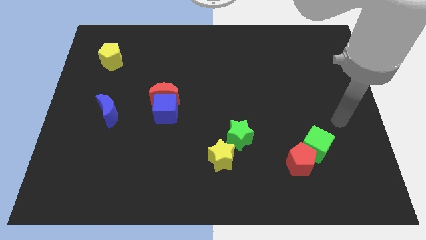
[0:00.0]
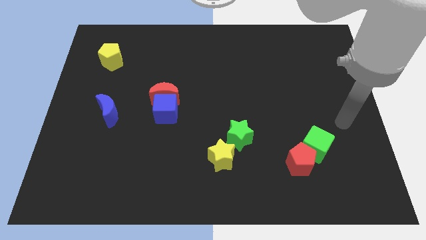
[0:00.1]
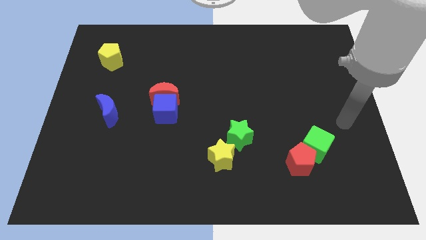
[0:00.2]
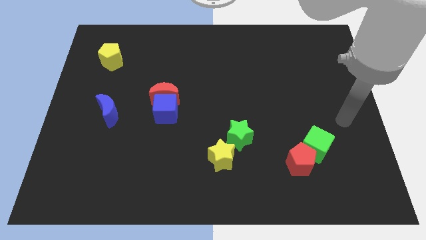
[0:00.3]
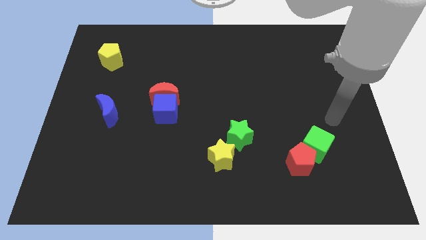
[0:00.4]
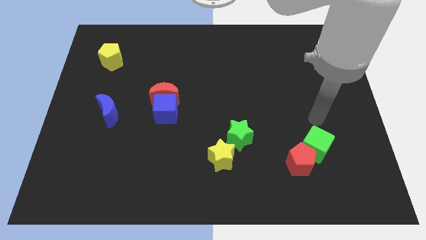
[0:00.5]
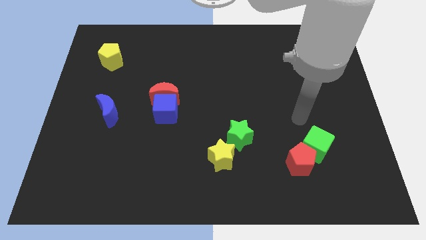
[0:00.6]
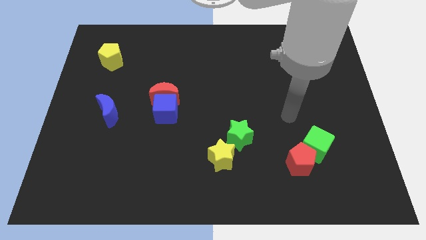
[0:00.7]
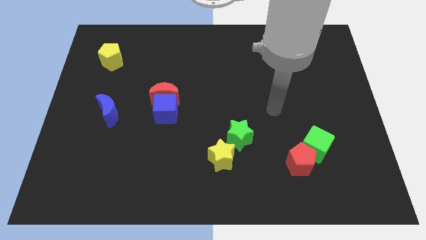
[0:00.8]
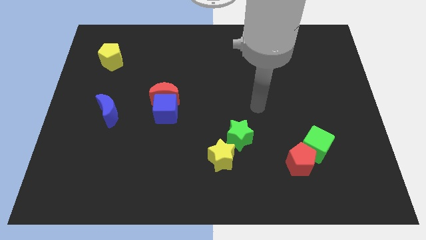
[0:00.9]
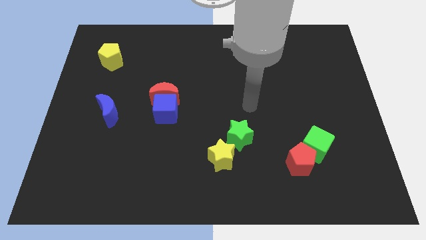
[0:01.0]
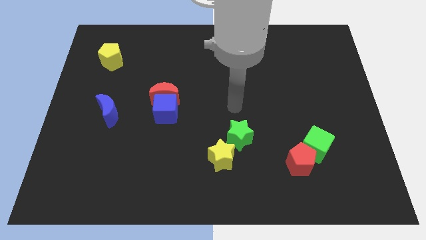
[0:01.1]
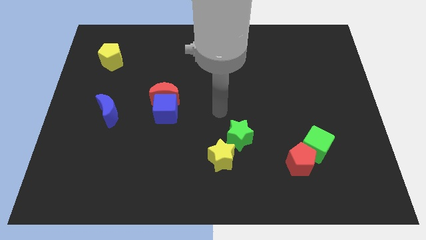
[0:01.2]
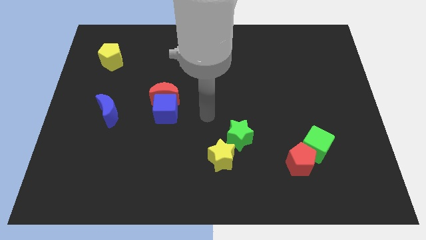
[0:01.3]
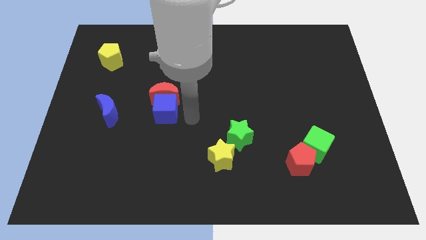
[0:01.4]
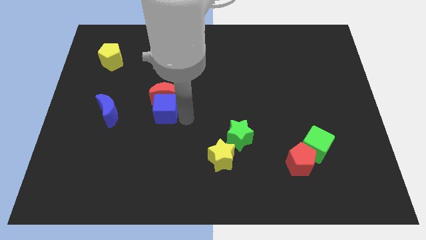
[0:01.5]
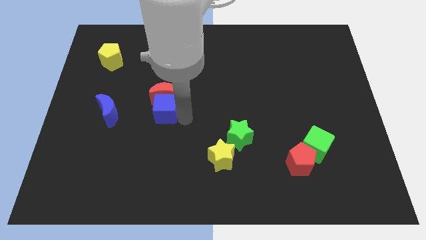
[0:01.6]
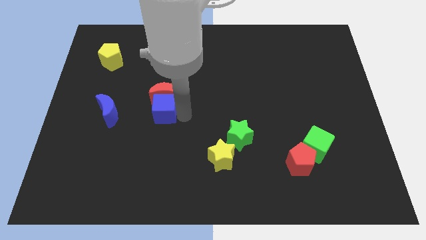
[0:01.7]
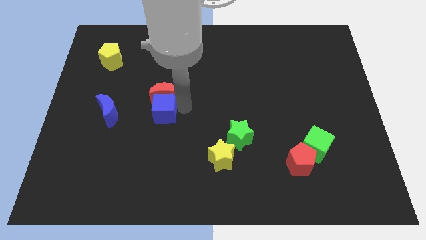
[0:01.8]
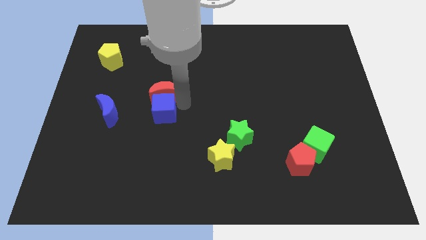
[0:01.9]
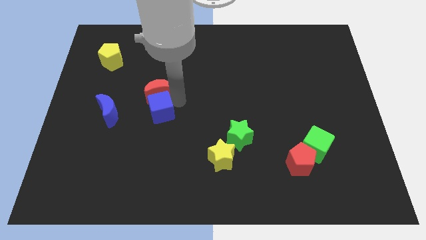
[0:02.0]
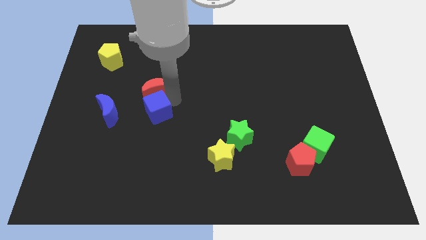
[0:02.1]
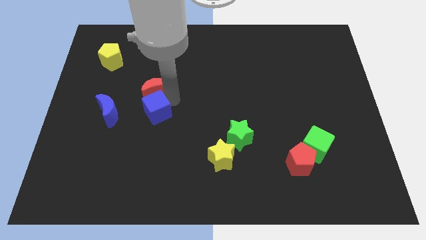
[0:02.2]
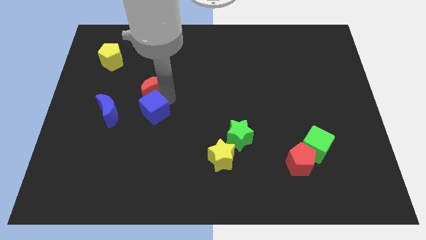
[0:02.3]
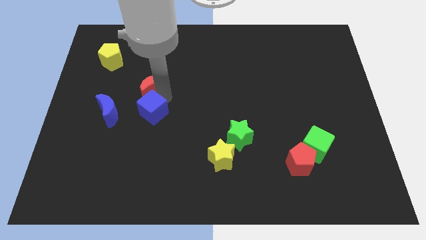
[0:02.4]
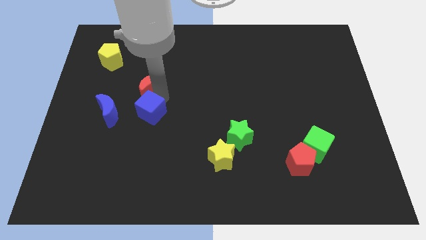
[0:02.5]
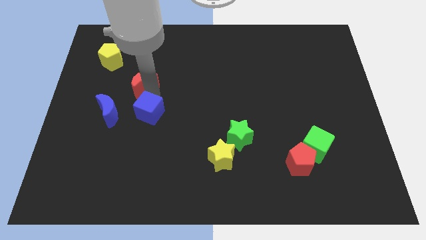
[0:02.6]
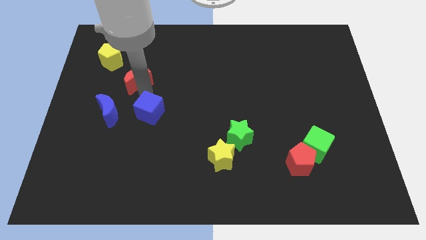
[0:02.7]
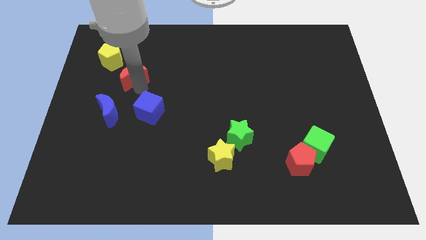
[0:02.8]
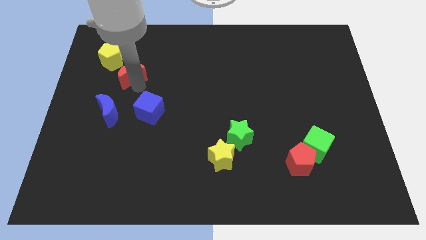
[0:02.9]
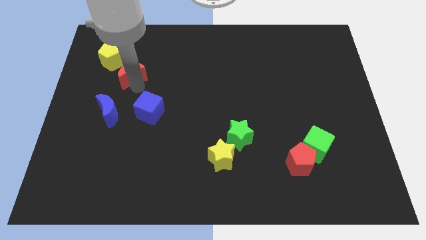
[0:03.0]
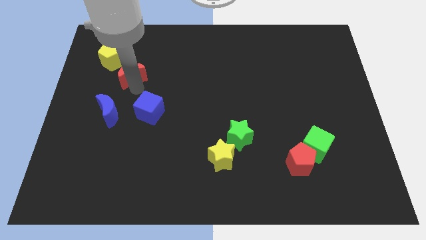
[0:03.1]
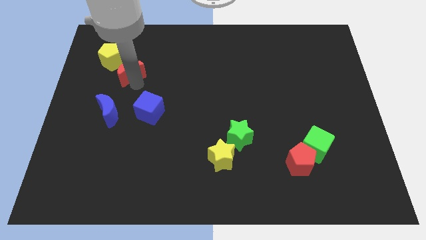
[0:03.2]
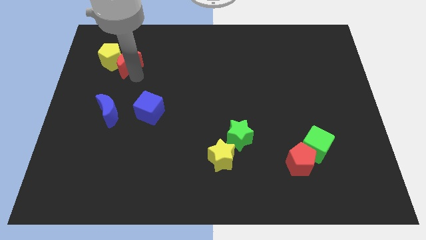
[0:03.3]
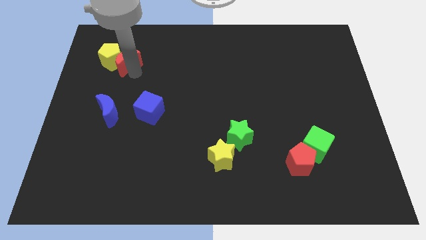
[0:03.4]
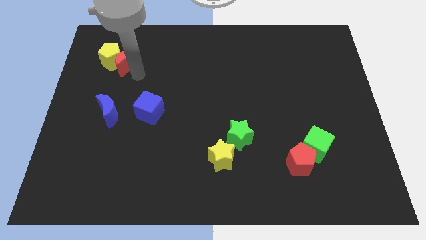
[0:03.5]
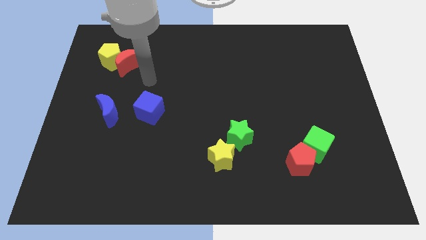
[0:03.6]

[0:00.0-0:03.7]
push blue moon towards left side of the board

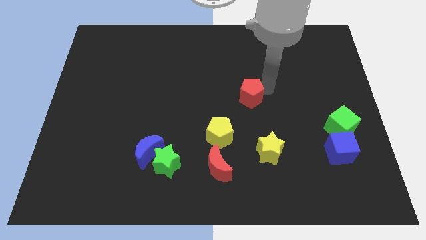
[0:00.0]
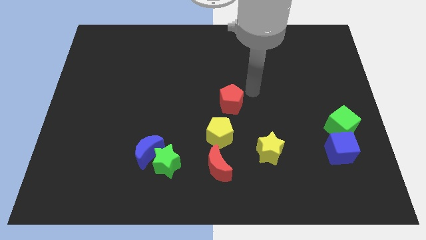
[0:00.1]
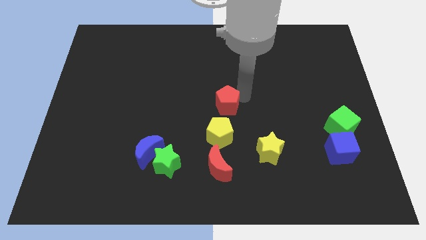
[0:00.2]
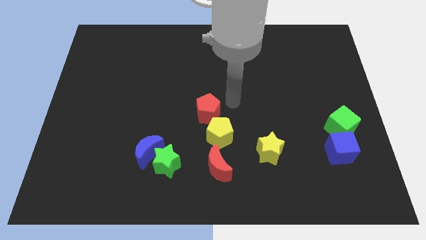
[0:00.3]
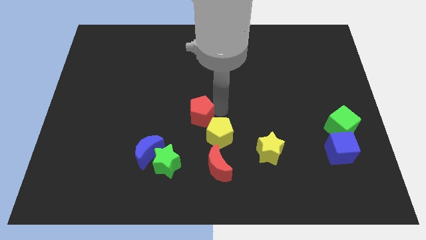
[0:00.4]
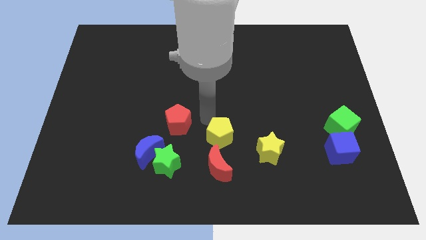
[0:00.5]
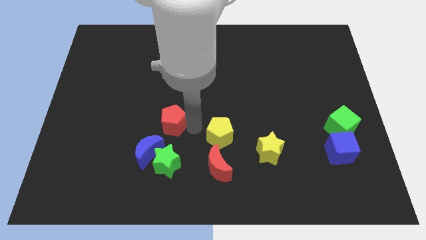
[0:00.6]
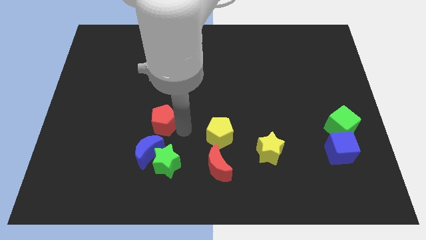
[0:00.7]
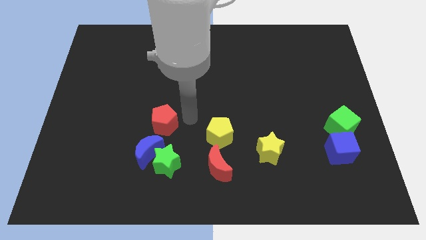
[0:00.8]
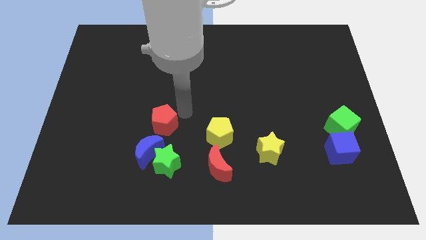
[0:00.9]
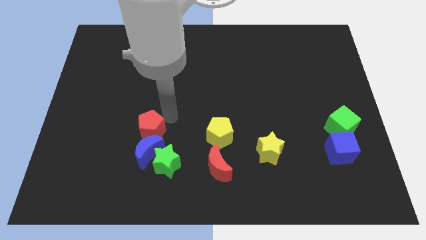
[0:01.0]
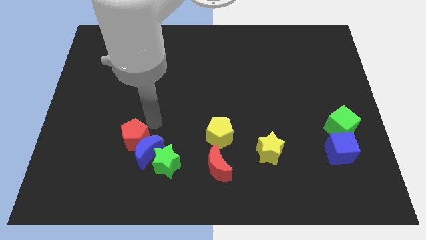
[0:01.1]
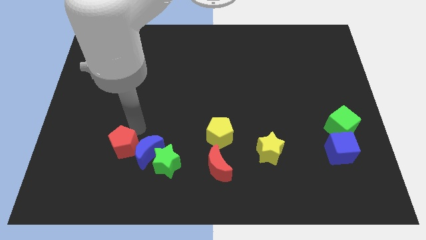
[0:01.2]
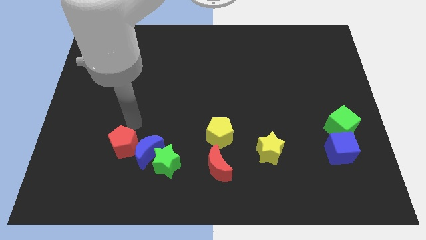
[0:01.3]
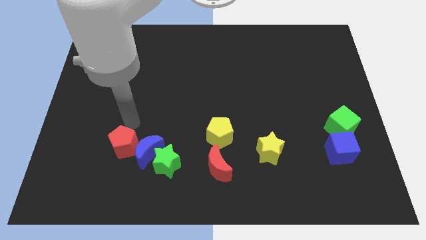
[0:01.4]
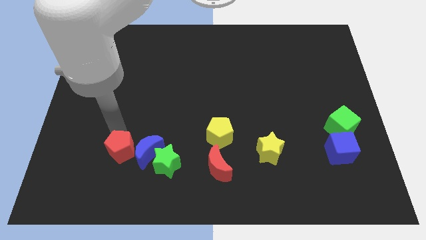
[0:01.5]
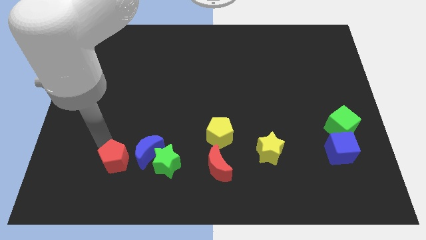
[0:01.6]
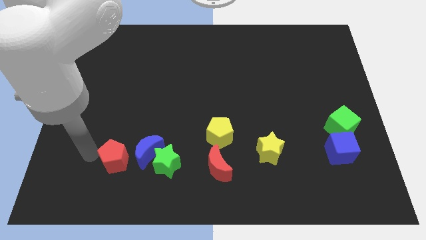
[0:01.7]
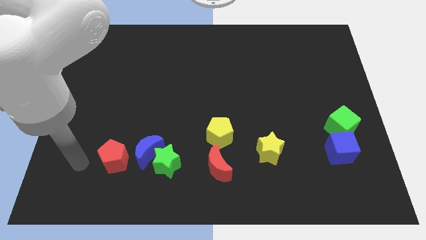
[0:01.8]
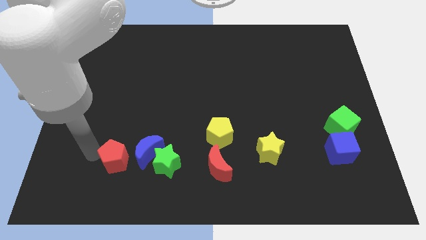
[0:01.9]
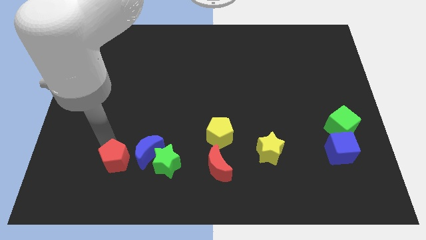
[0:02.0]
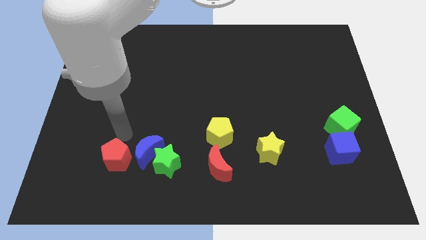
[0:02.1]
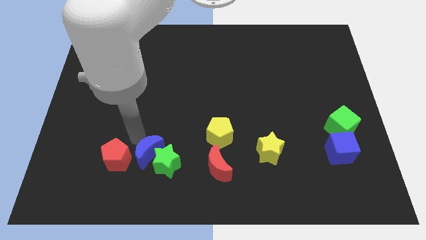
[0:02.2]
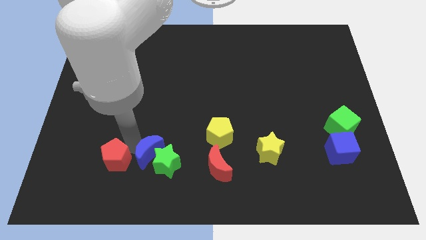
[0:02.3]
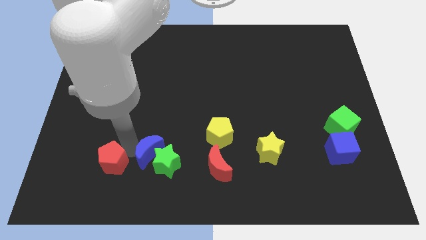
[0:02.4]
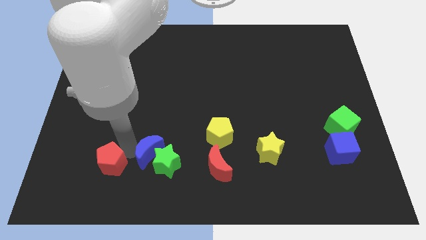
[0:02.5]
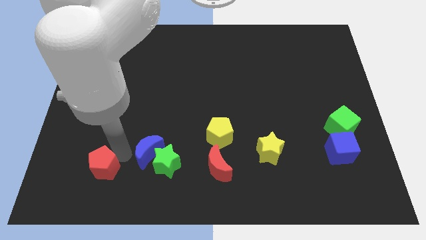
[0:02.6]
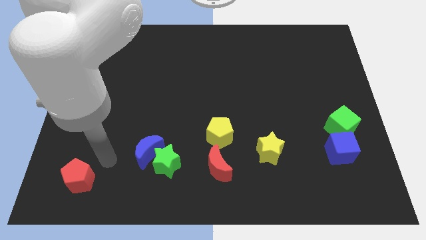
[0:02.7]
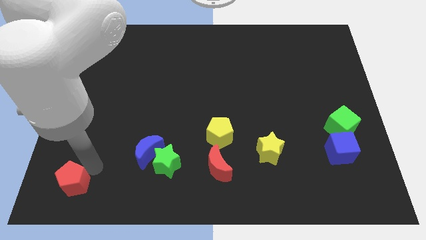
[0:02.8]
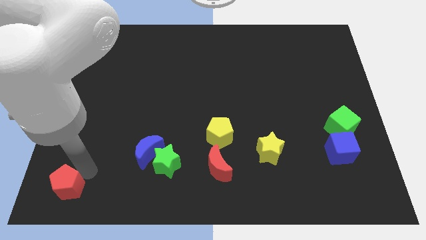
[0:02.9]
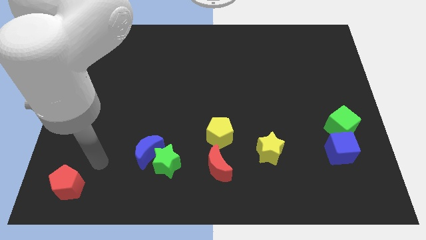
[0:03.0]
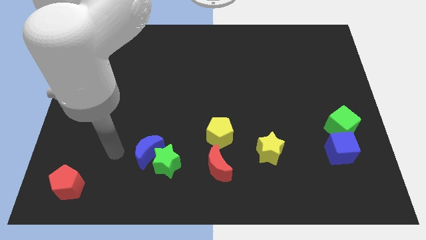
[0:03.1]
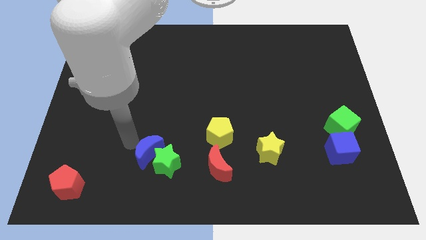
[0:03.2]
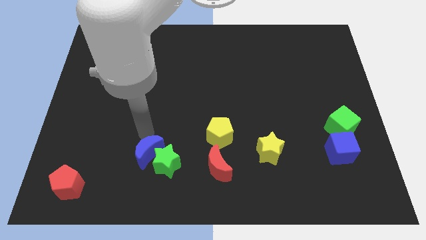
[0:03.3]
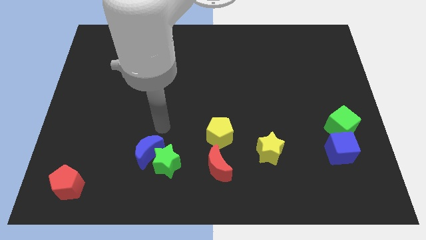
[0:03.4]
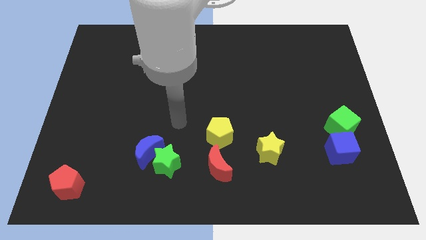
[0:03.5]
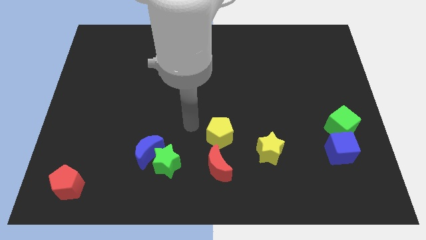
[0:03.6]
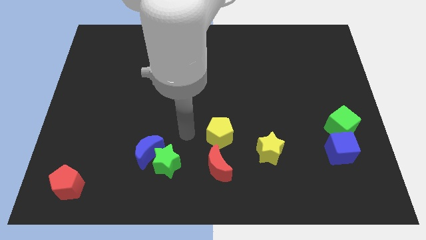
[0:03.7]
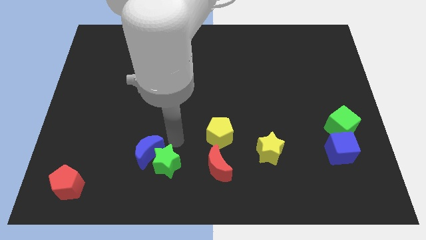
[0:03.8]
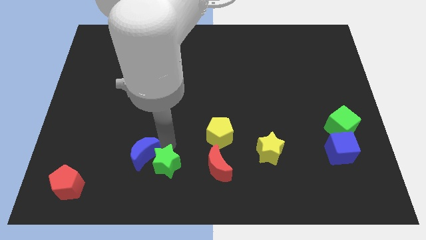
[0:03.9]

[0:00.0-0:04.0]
push the red pentagon to the bottom left of the board

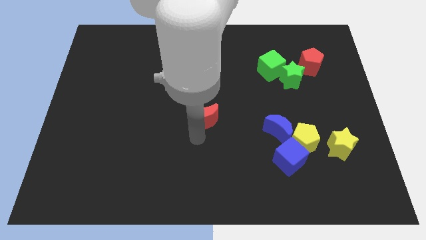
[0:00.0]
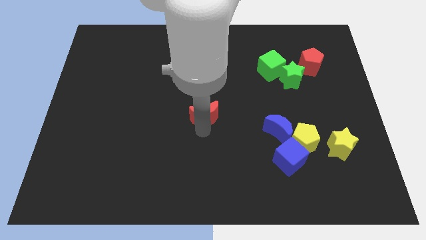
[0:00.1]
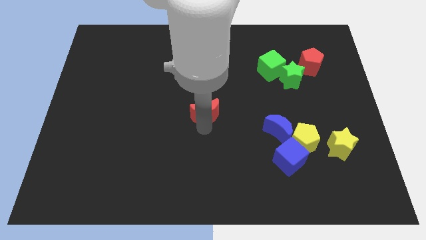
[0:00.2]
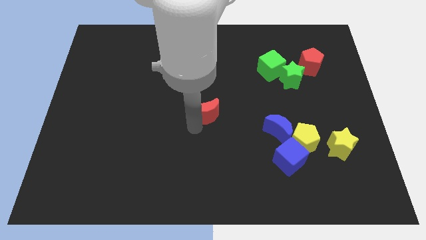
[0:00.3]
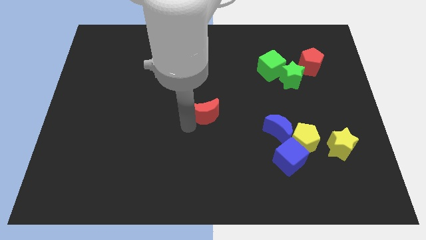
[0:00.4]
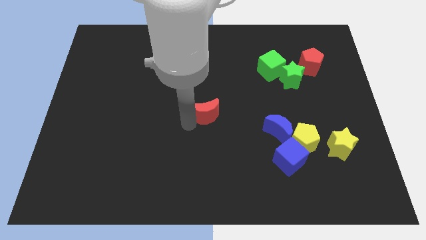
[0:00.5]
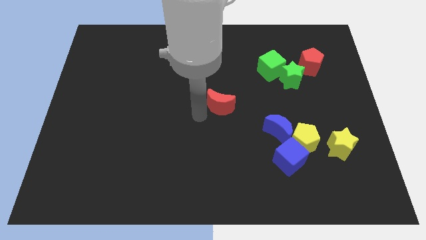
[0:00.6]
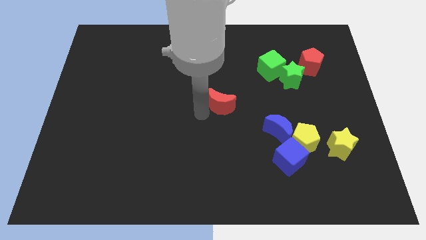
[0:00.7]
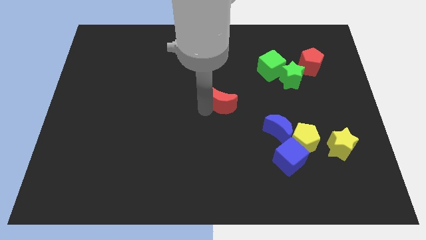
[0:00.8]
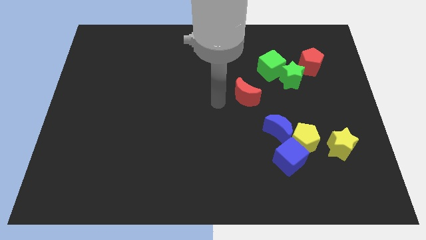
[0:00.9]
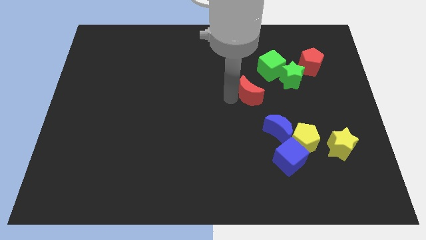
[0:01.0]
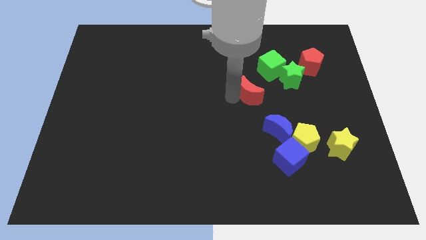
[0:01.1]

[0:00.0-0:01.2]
move the red crescent close towards the green star

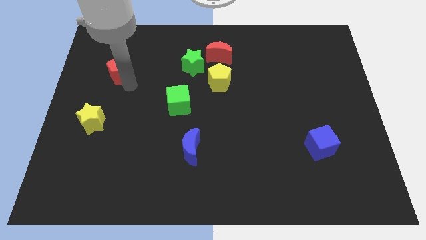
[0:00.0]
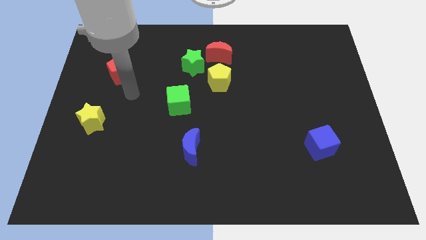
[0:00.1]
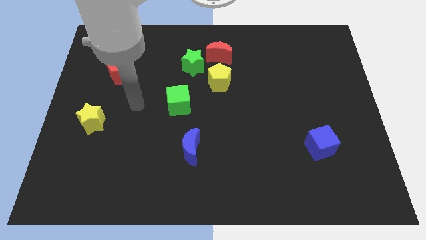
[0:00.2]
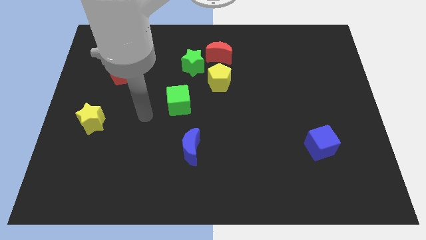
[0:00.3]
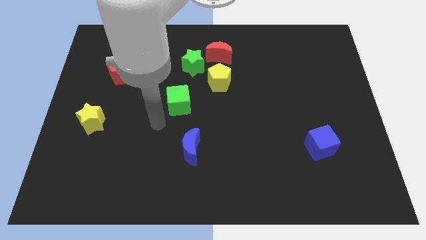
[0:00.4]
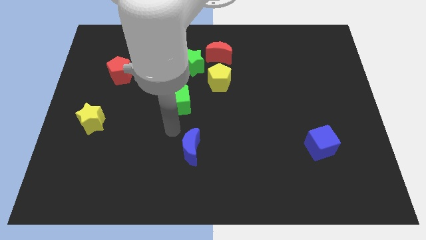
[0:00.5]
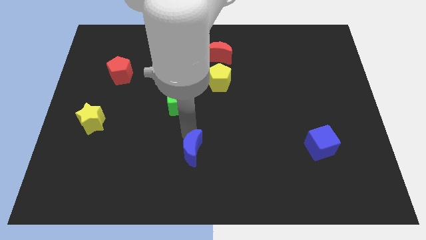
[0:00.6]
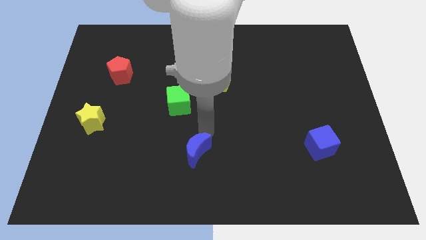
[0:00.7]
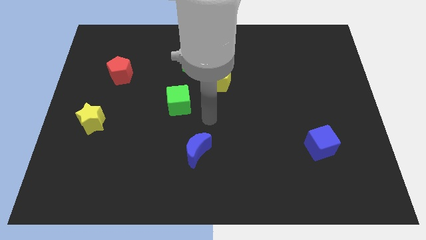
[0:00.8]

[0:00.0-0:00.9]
slightly push the blue moon towards the bottom center of the board
